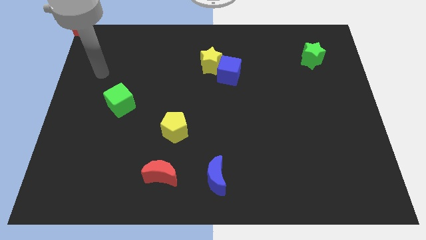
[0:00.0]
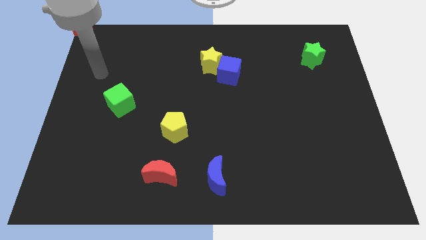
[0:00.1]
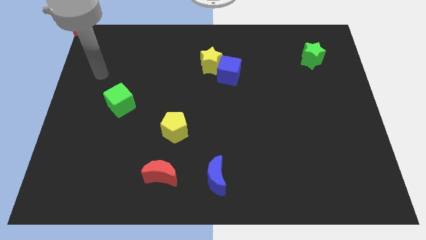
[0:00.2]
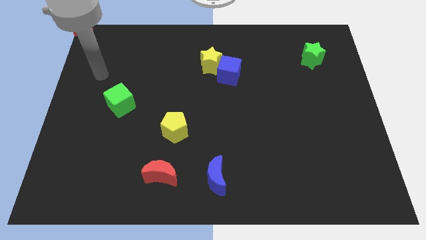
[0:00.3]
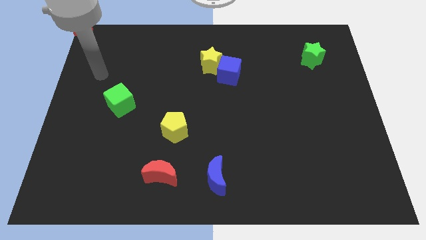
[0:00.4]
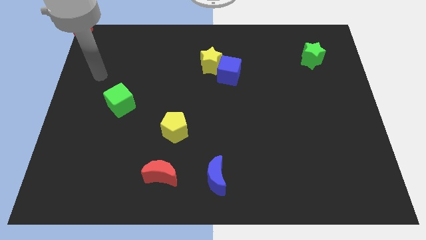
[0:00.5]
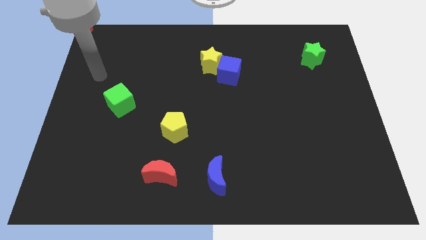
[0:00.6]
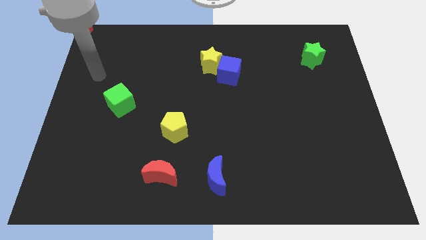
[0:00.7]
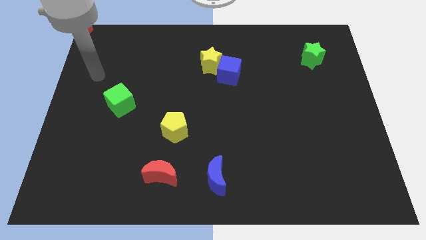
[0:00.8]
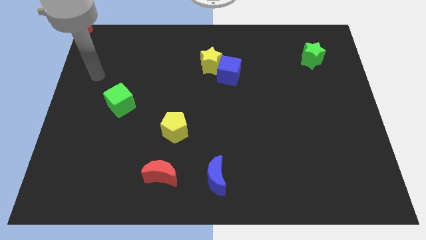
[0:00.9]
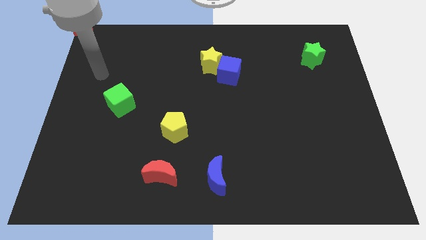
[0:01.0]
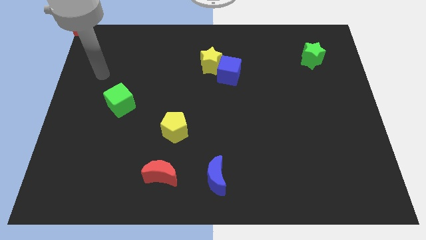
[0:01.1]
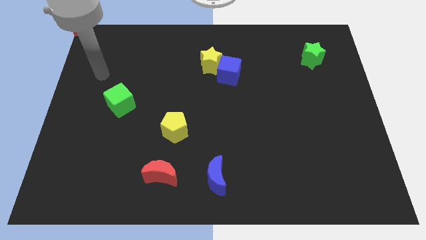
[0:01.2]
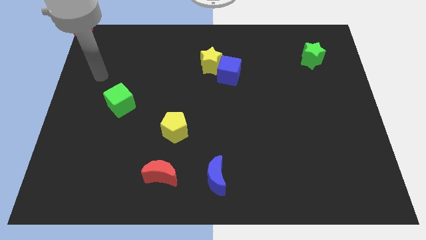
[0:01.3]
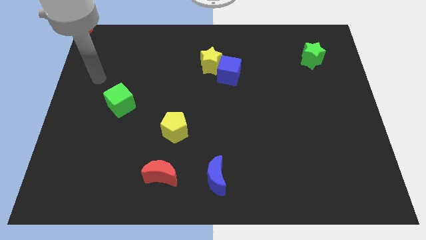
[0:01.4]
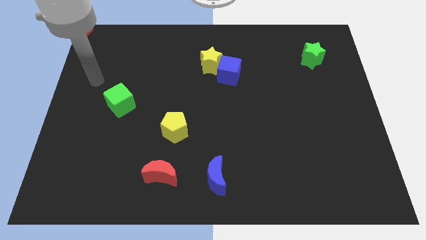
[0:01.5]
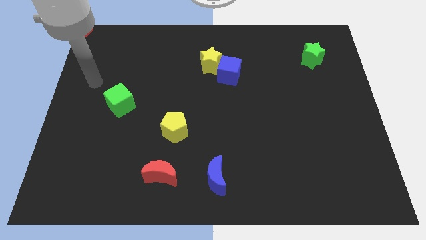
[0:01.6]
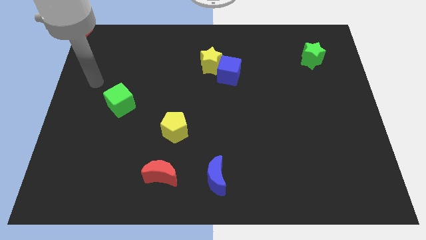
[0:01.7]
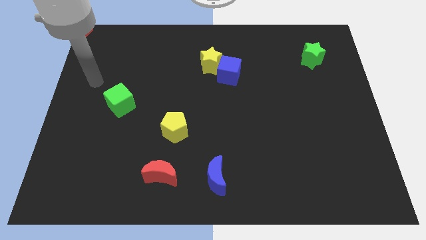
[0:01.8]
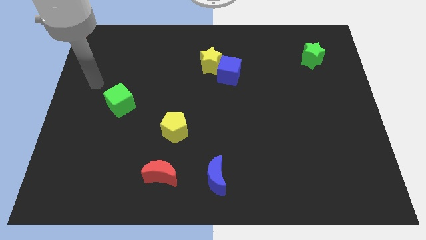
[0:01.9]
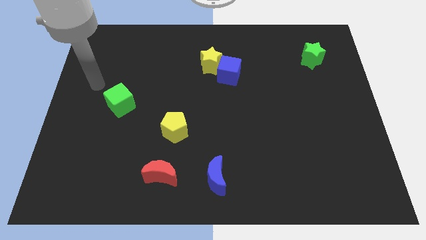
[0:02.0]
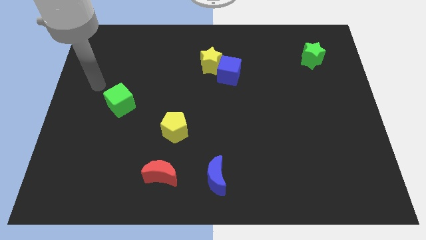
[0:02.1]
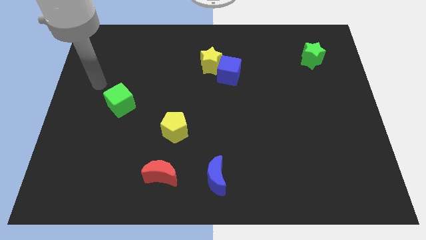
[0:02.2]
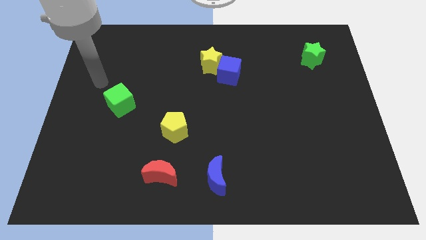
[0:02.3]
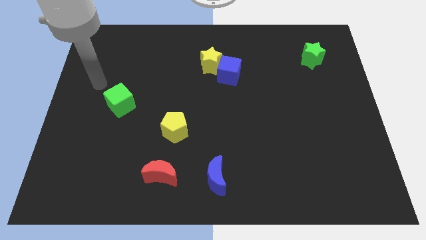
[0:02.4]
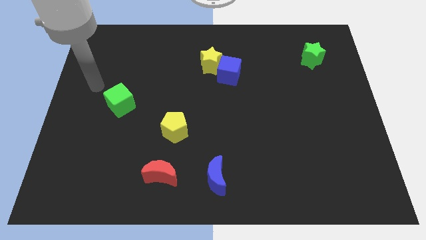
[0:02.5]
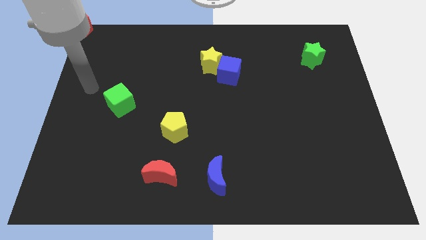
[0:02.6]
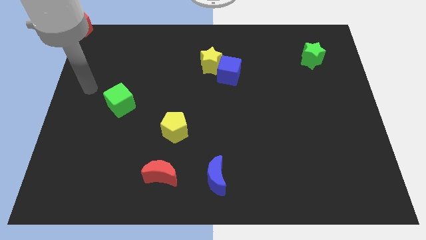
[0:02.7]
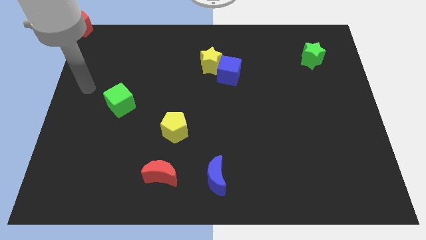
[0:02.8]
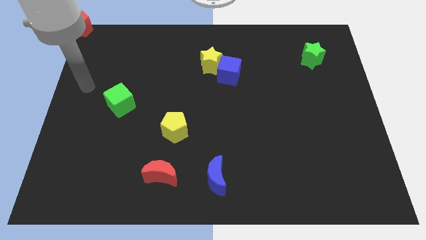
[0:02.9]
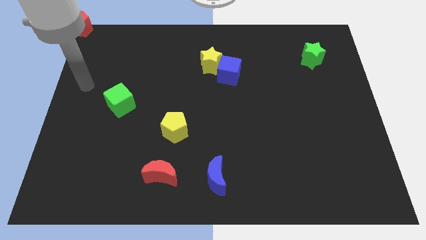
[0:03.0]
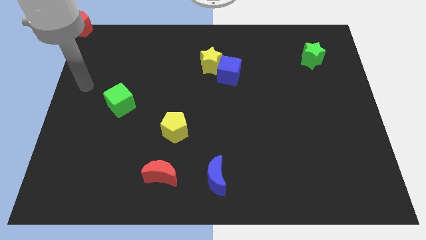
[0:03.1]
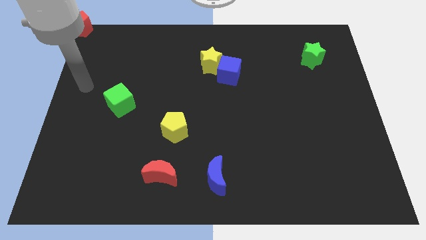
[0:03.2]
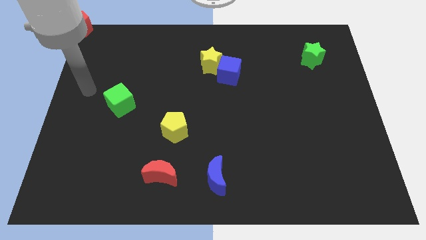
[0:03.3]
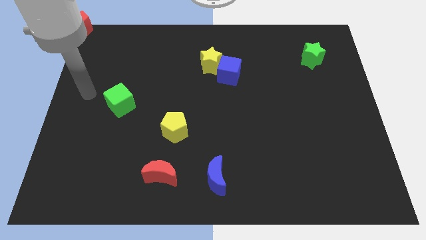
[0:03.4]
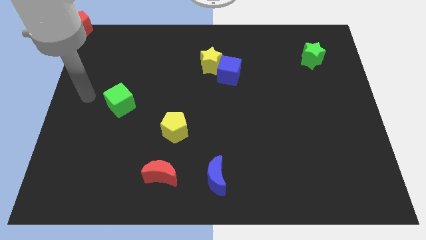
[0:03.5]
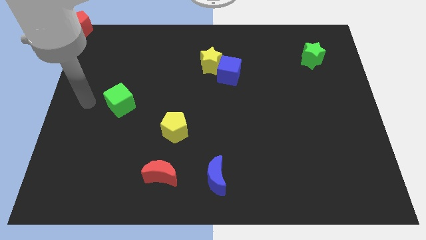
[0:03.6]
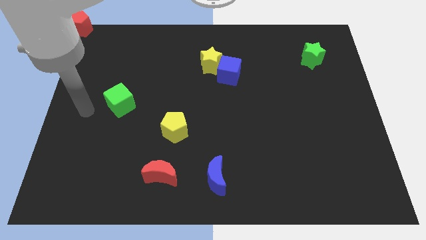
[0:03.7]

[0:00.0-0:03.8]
place your hand at the left side of the green cube

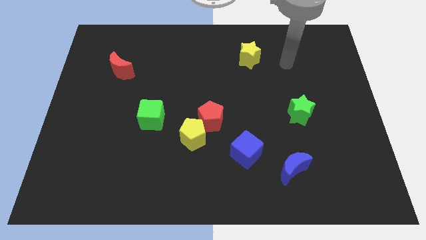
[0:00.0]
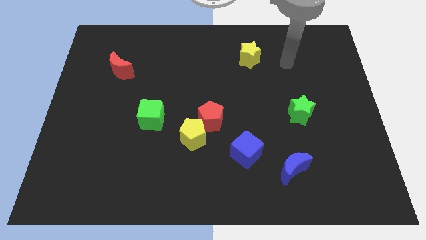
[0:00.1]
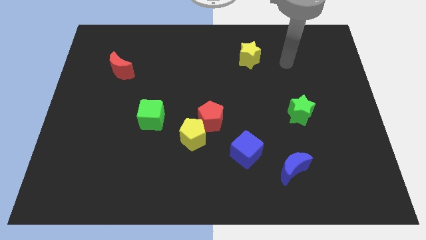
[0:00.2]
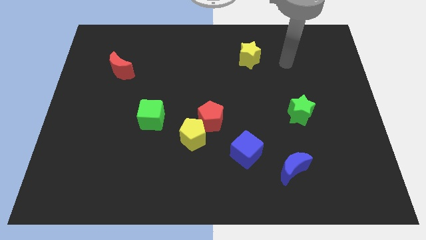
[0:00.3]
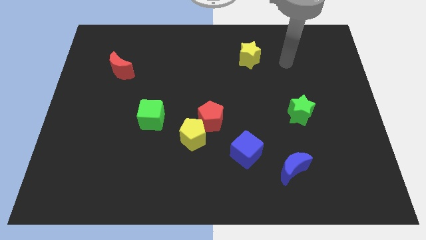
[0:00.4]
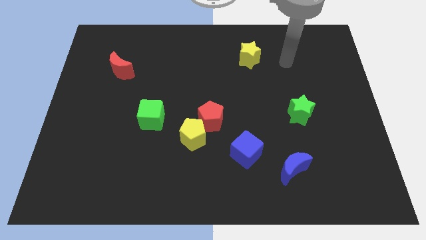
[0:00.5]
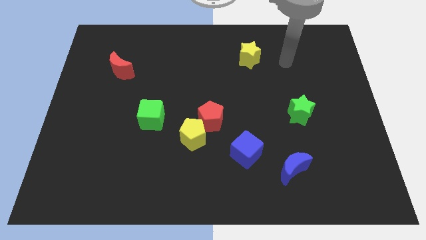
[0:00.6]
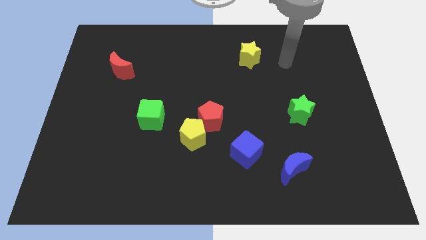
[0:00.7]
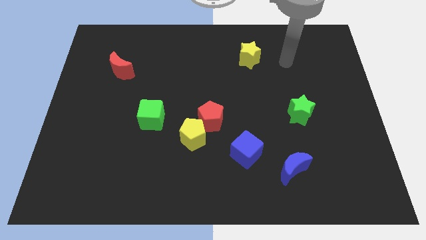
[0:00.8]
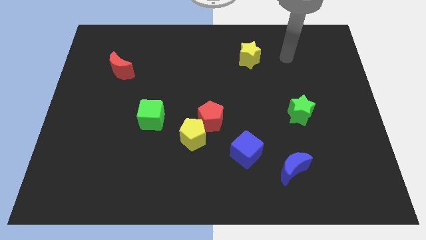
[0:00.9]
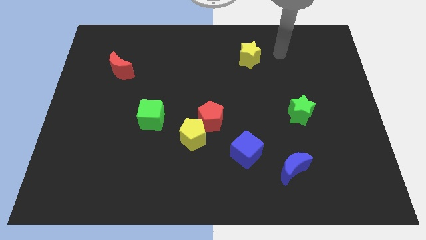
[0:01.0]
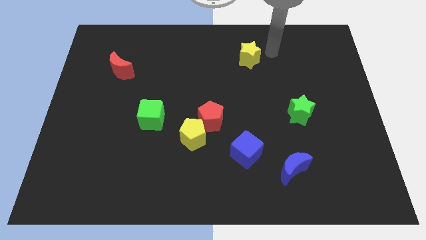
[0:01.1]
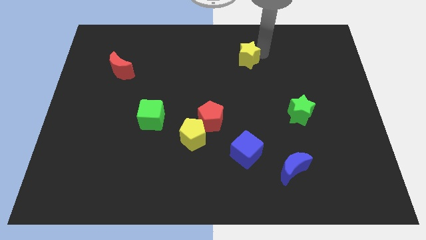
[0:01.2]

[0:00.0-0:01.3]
point your arm at the right side of the yellow star

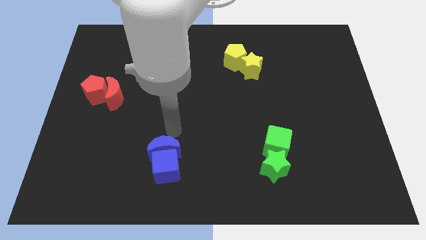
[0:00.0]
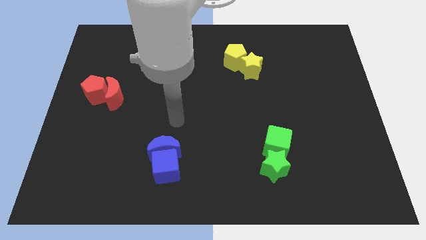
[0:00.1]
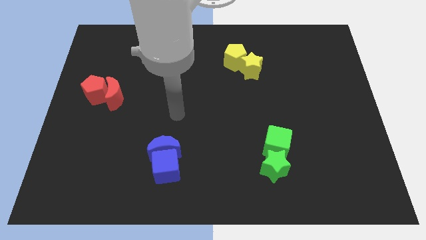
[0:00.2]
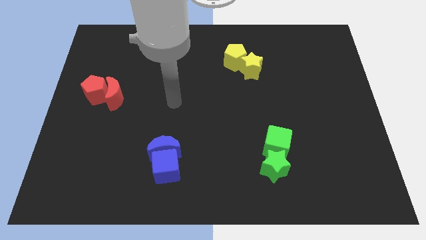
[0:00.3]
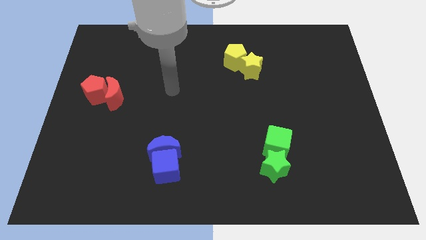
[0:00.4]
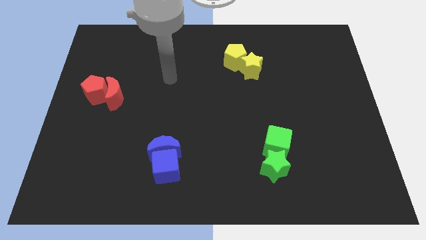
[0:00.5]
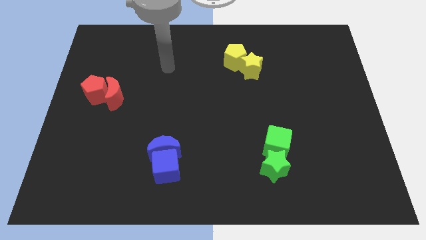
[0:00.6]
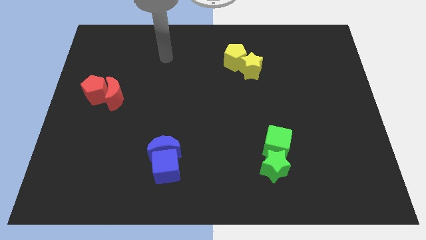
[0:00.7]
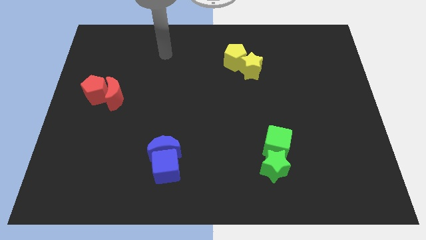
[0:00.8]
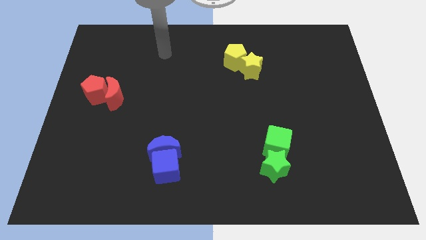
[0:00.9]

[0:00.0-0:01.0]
move your arm away from the blue blocks

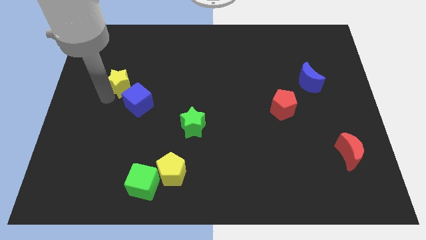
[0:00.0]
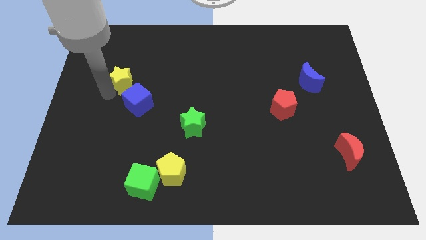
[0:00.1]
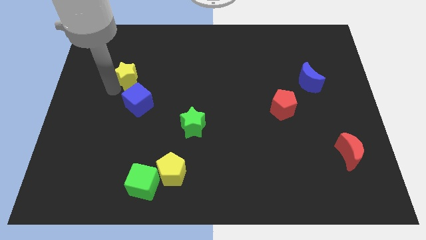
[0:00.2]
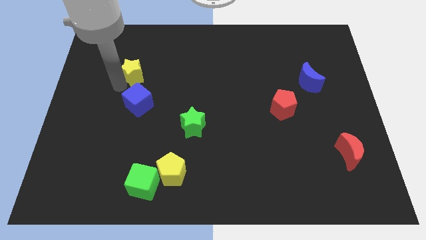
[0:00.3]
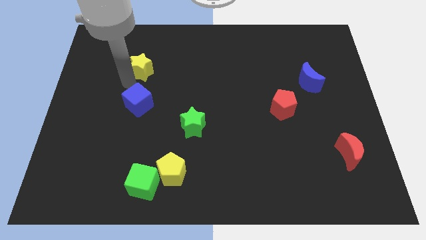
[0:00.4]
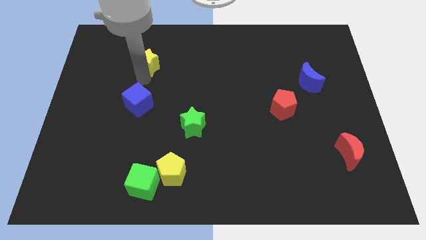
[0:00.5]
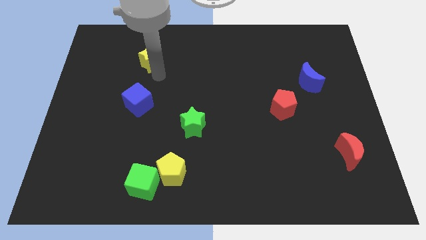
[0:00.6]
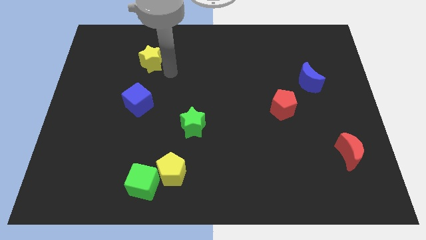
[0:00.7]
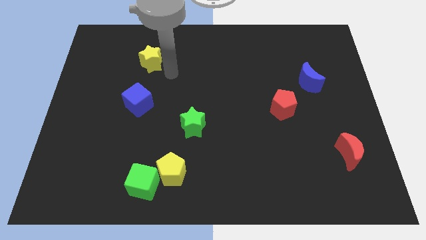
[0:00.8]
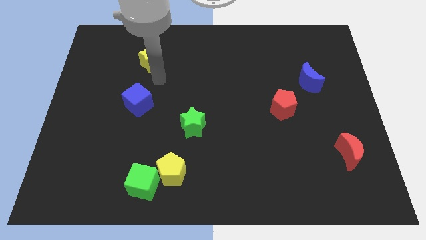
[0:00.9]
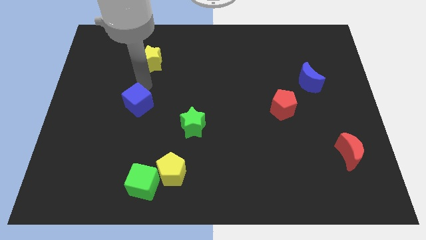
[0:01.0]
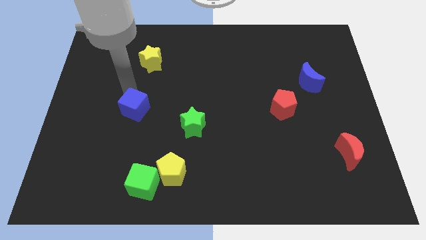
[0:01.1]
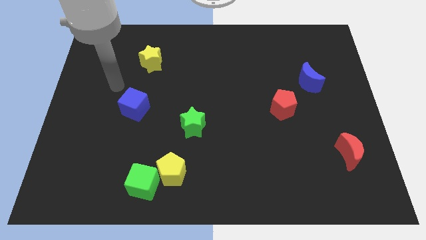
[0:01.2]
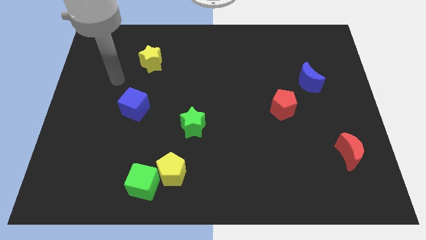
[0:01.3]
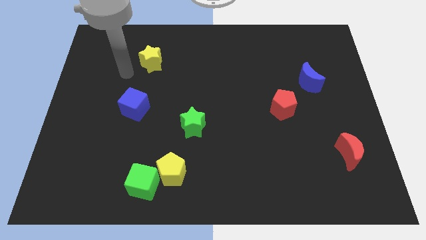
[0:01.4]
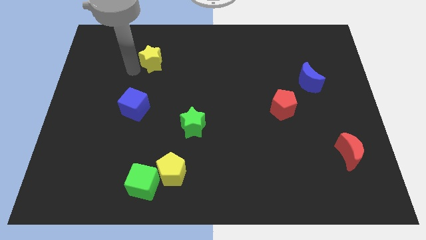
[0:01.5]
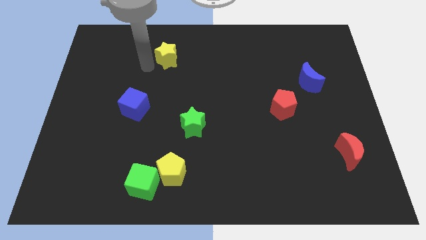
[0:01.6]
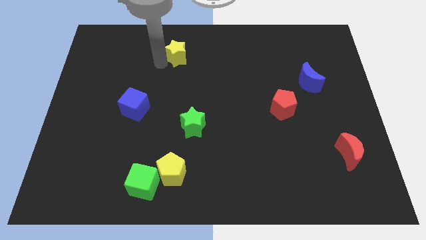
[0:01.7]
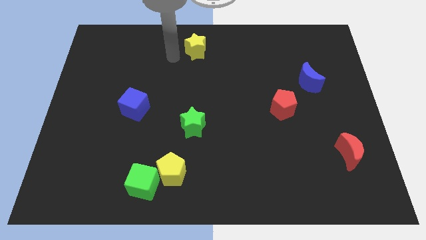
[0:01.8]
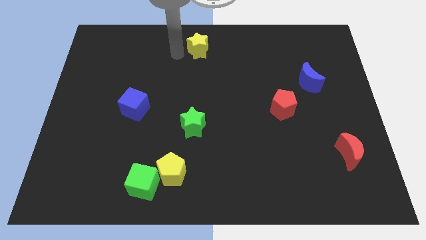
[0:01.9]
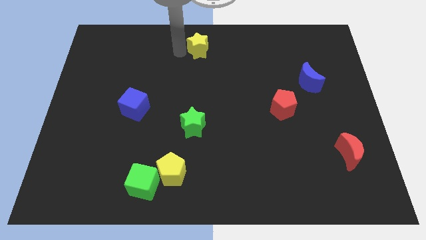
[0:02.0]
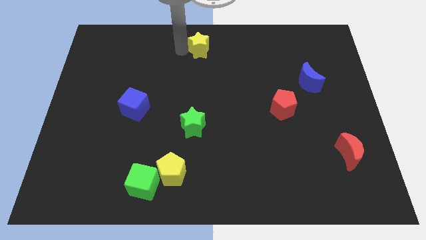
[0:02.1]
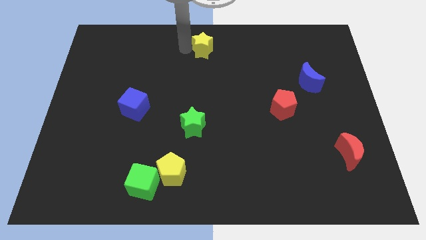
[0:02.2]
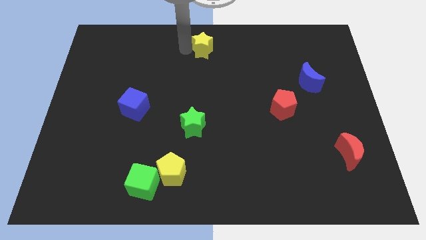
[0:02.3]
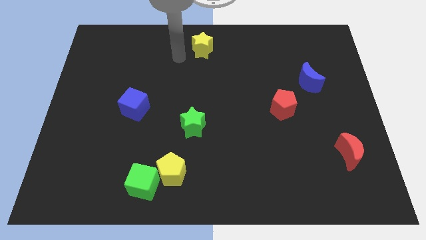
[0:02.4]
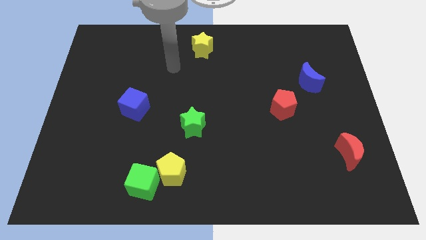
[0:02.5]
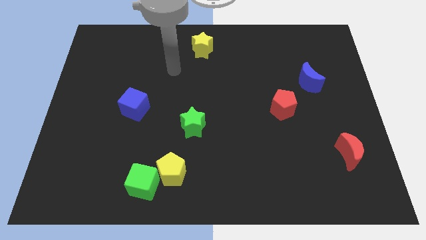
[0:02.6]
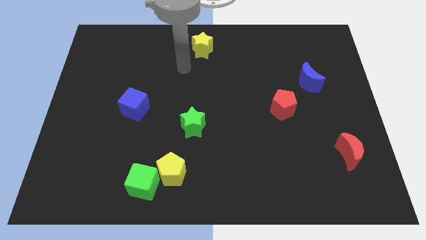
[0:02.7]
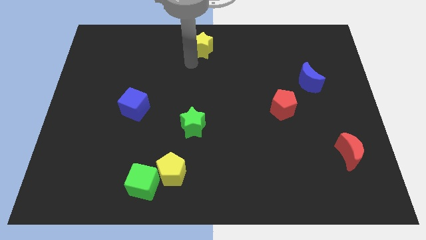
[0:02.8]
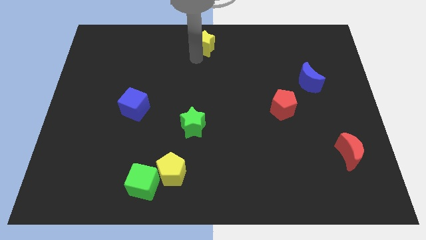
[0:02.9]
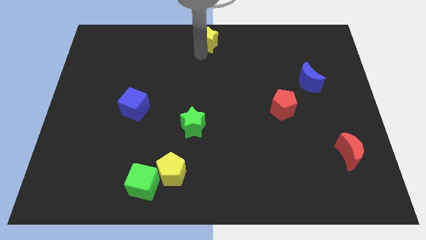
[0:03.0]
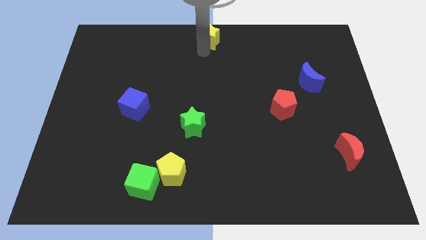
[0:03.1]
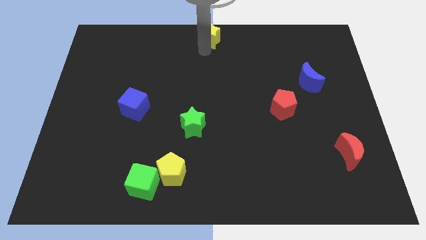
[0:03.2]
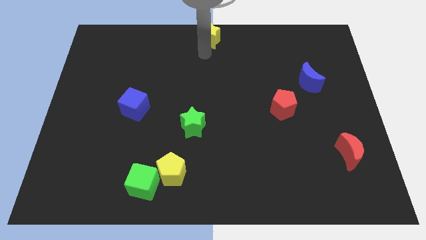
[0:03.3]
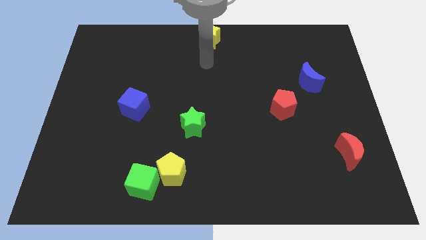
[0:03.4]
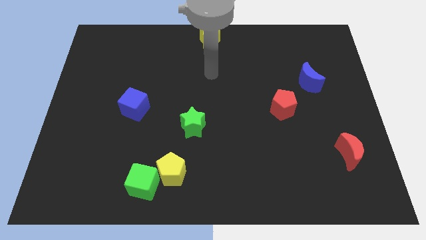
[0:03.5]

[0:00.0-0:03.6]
place the yellow star at the top center of the board
